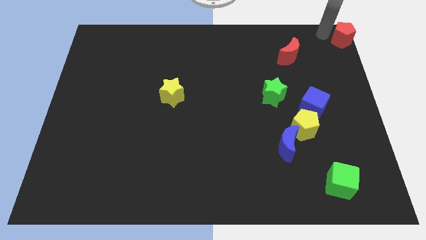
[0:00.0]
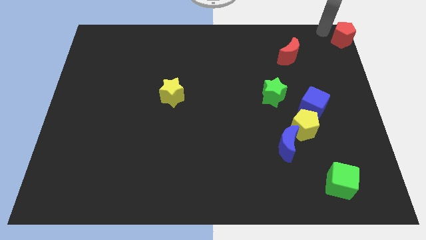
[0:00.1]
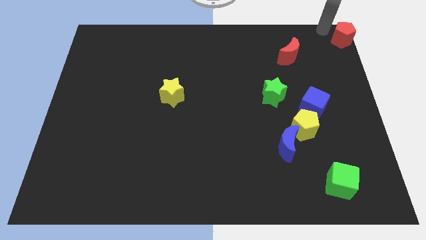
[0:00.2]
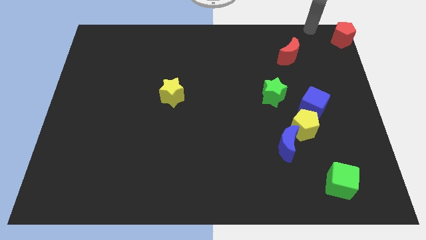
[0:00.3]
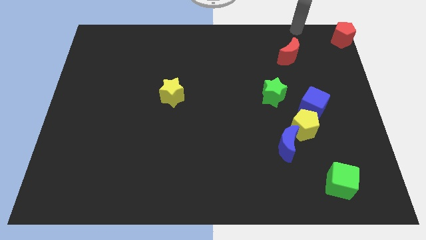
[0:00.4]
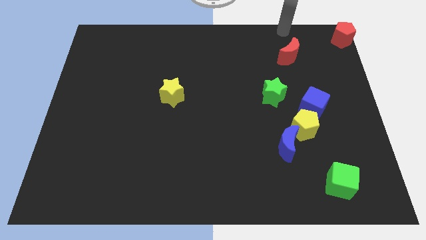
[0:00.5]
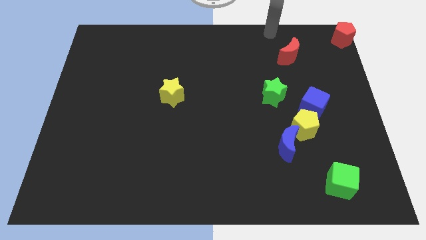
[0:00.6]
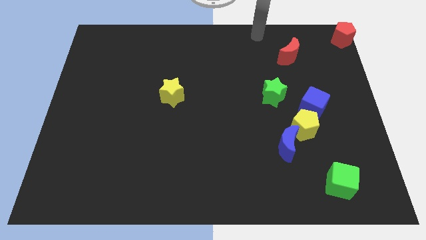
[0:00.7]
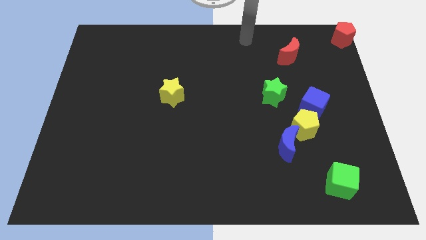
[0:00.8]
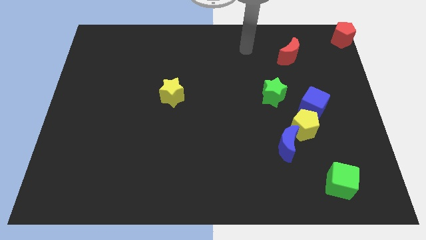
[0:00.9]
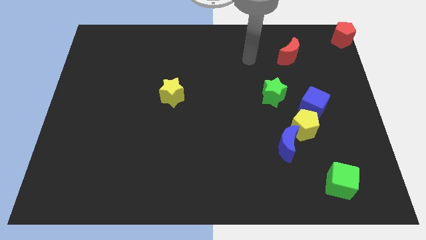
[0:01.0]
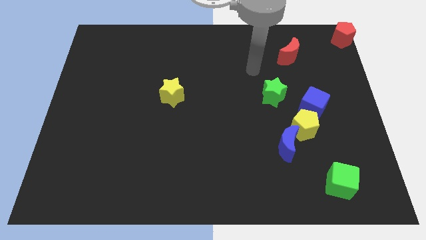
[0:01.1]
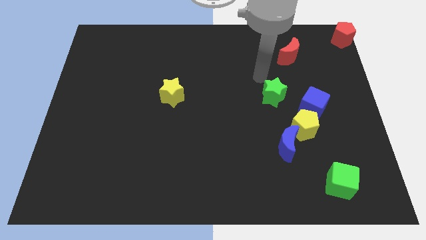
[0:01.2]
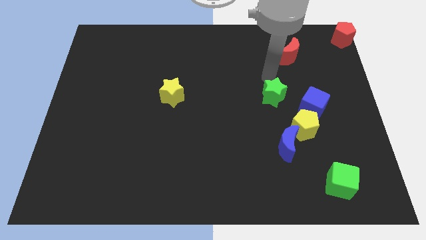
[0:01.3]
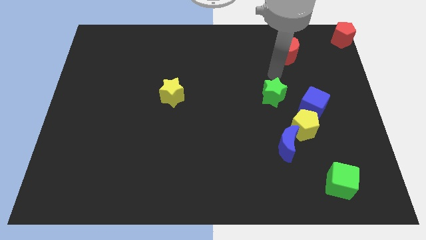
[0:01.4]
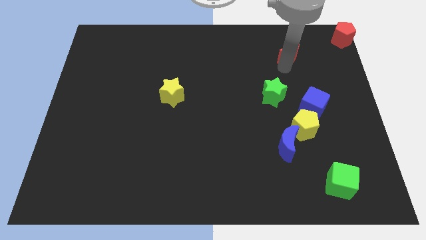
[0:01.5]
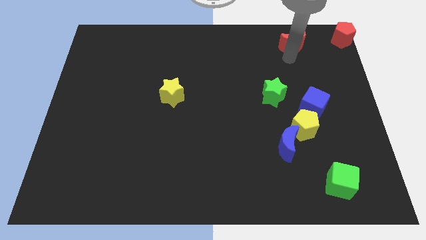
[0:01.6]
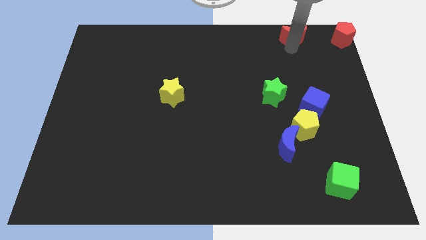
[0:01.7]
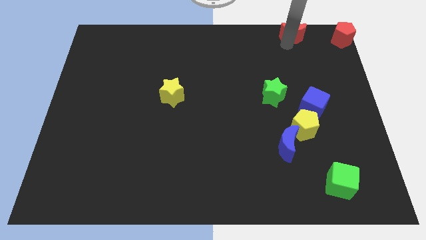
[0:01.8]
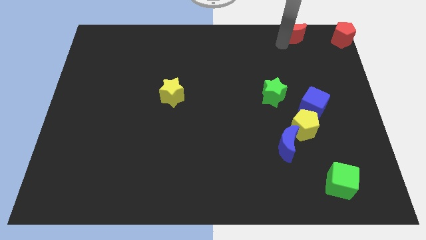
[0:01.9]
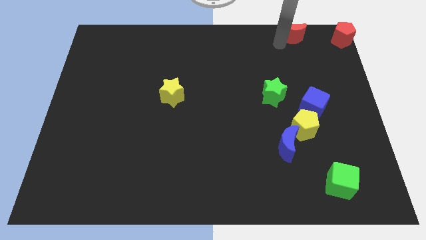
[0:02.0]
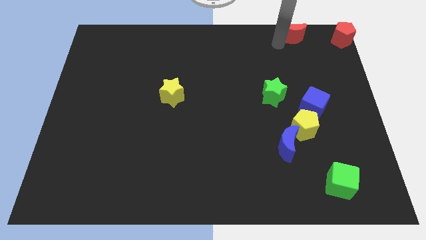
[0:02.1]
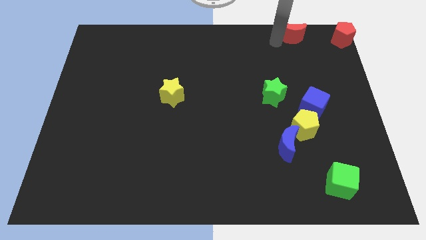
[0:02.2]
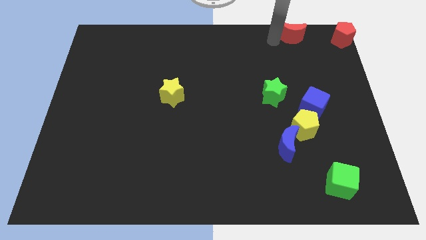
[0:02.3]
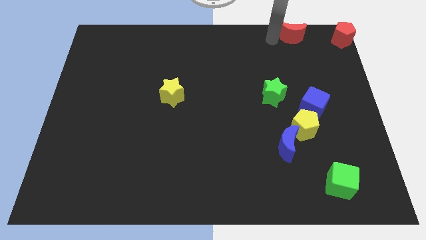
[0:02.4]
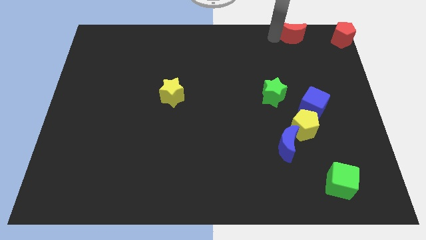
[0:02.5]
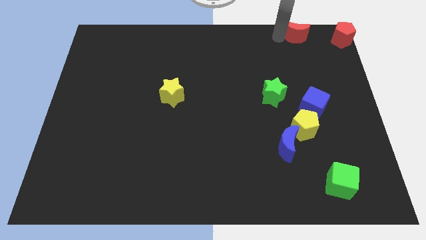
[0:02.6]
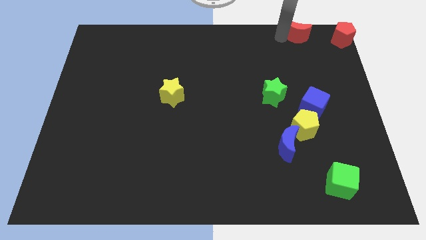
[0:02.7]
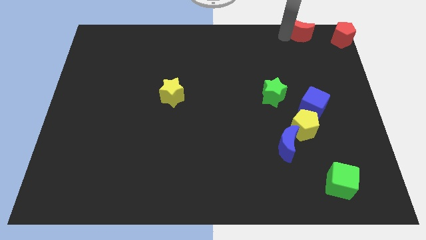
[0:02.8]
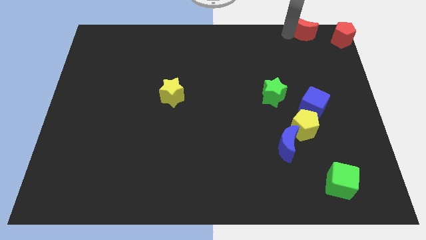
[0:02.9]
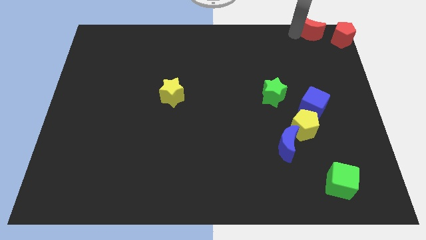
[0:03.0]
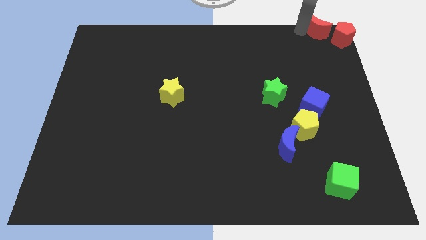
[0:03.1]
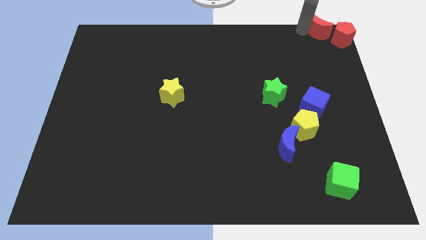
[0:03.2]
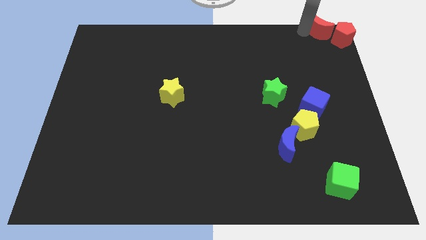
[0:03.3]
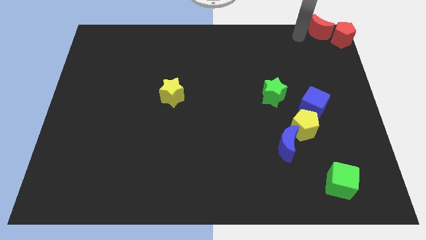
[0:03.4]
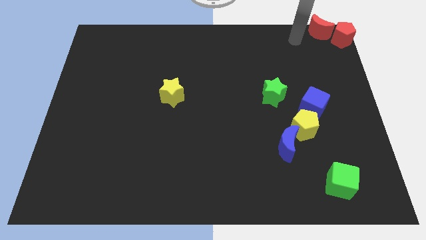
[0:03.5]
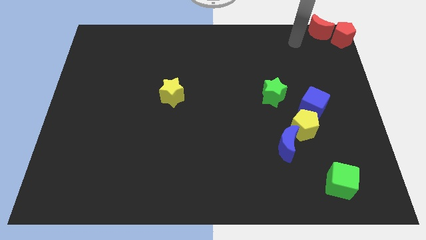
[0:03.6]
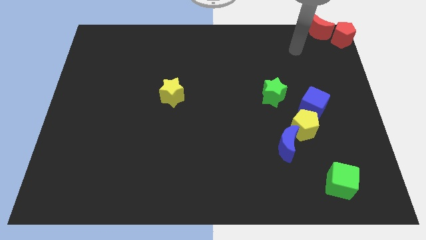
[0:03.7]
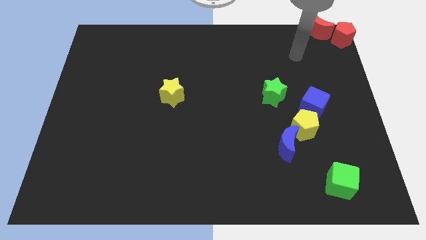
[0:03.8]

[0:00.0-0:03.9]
push the red crescent to the top right of the board

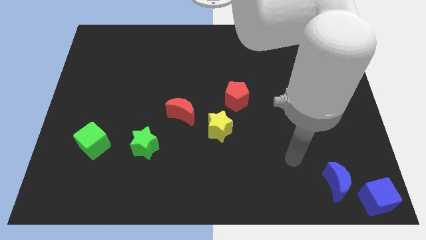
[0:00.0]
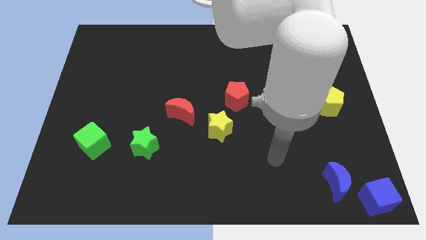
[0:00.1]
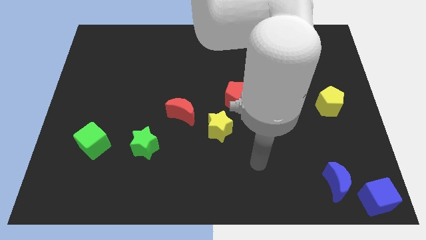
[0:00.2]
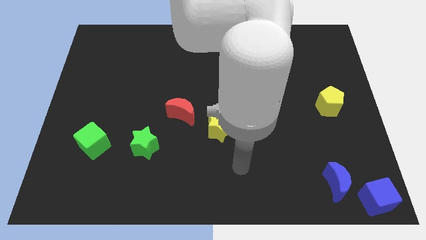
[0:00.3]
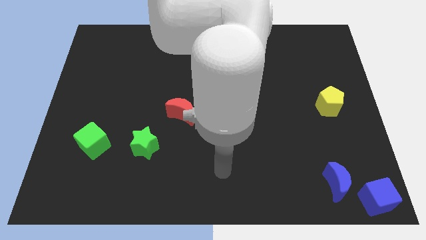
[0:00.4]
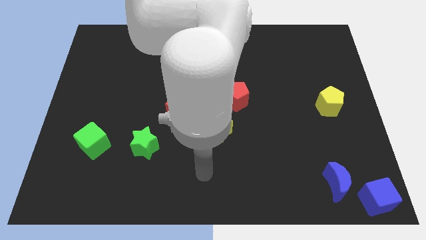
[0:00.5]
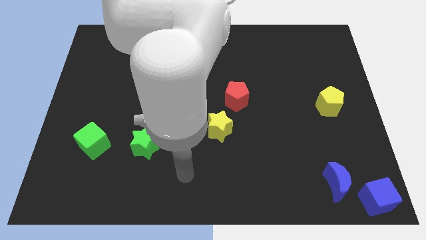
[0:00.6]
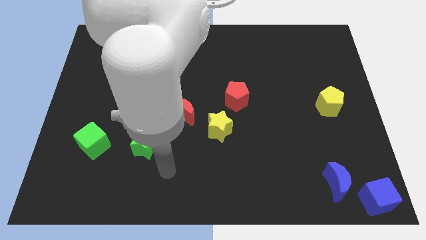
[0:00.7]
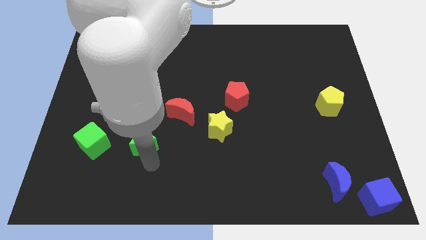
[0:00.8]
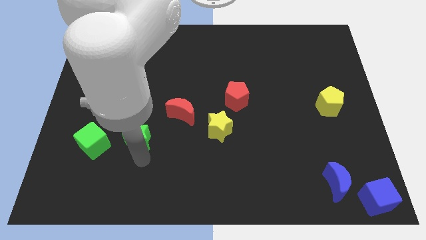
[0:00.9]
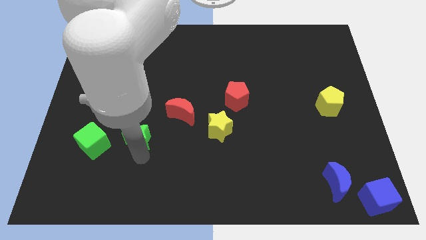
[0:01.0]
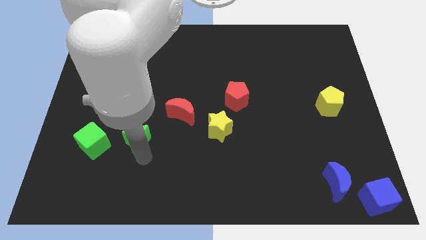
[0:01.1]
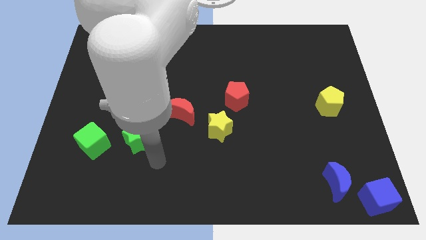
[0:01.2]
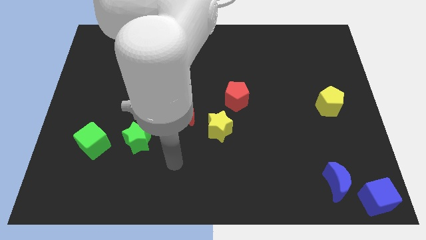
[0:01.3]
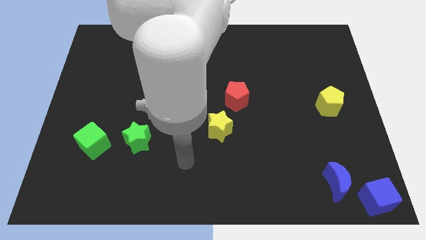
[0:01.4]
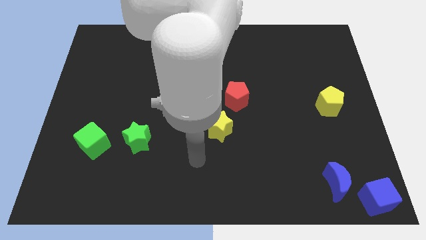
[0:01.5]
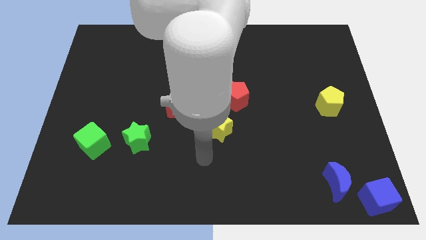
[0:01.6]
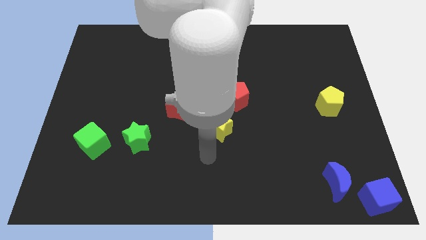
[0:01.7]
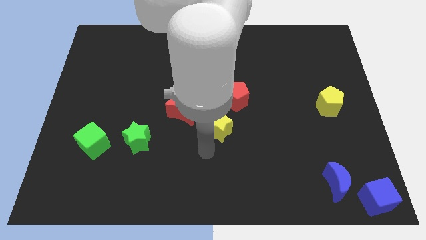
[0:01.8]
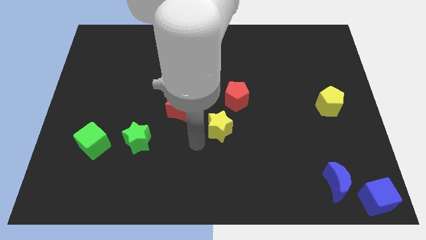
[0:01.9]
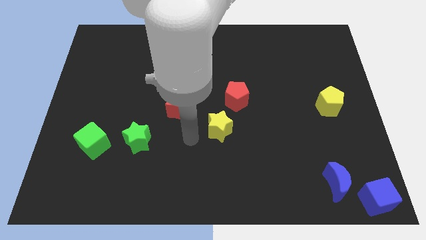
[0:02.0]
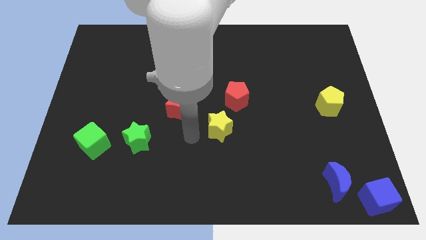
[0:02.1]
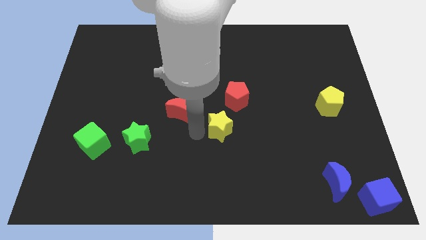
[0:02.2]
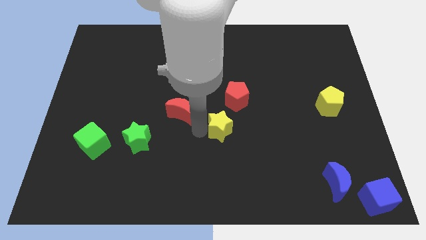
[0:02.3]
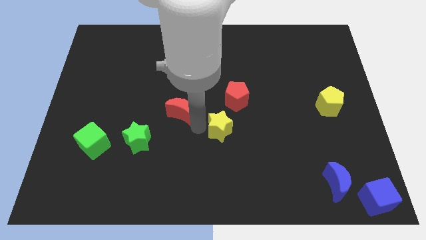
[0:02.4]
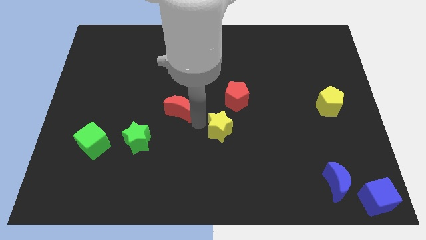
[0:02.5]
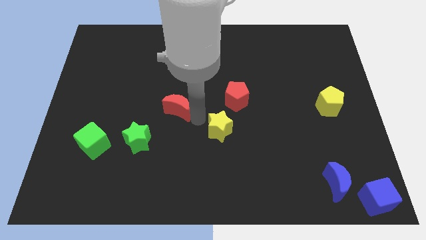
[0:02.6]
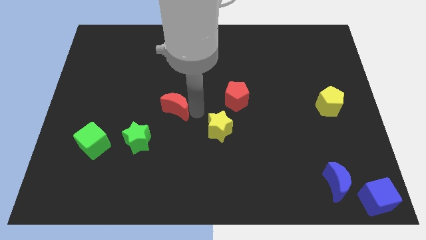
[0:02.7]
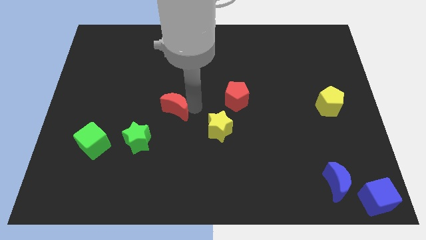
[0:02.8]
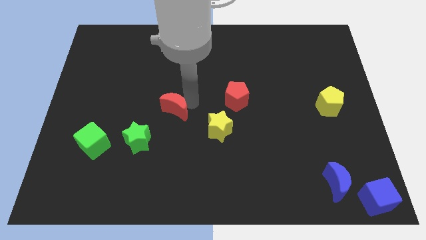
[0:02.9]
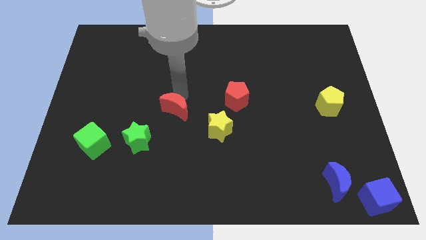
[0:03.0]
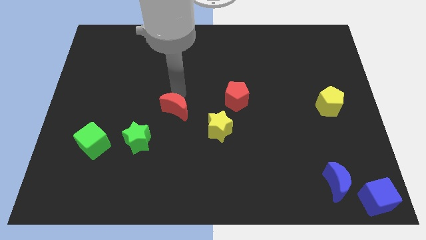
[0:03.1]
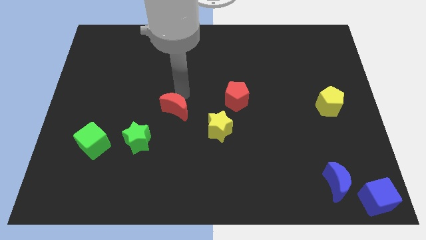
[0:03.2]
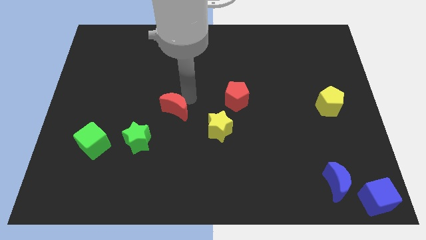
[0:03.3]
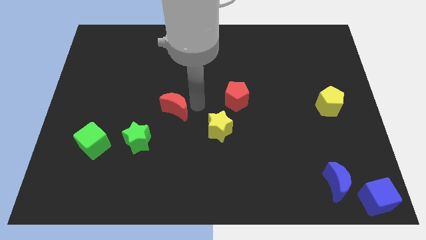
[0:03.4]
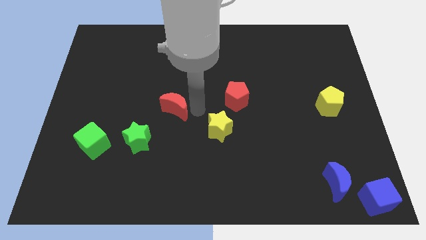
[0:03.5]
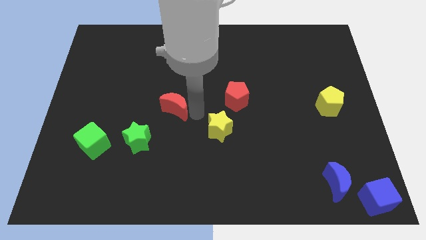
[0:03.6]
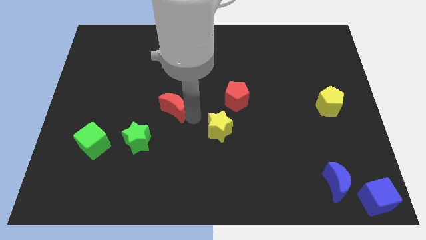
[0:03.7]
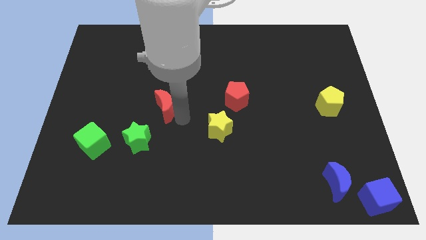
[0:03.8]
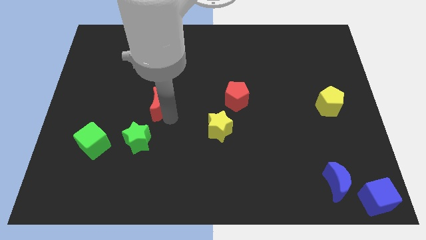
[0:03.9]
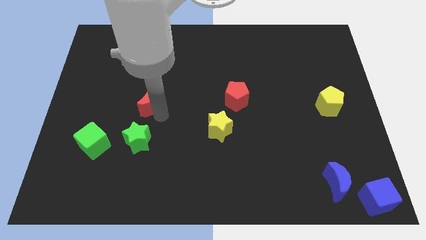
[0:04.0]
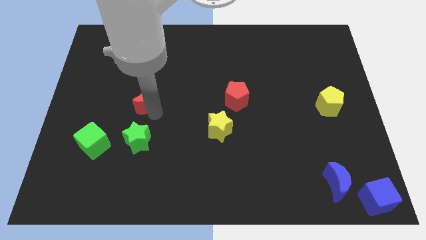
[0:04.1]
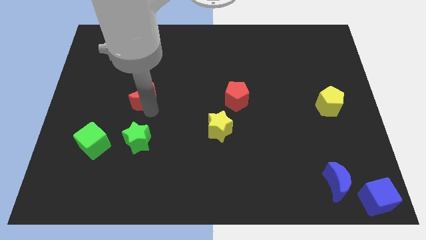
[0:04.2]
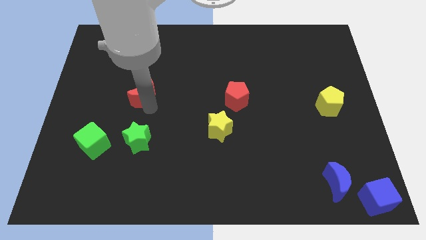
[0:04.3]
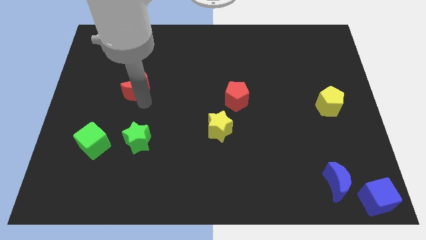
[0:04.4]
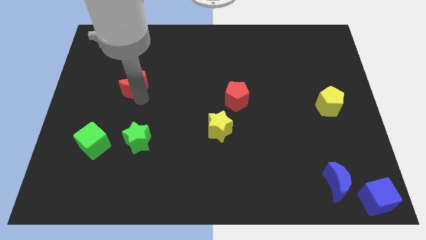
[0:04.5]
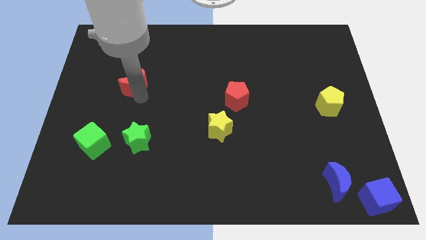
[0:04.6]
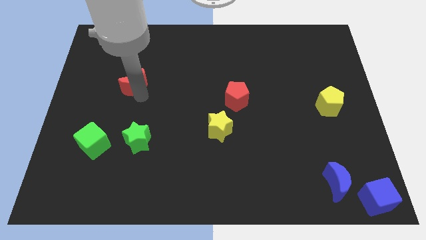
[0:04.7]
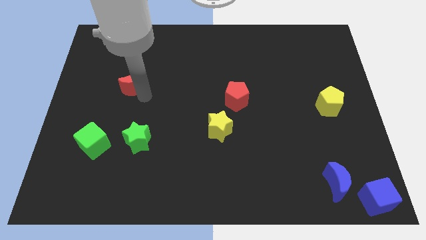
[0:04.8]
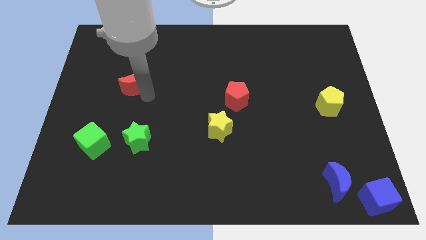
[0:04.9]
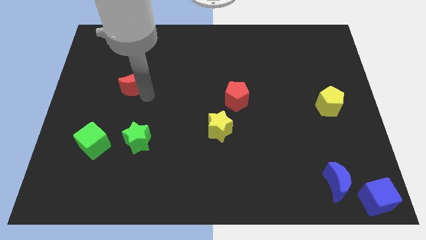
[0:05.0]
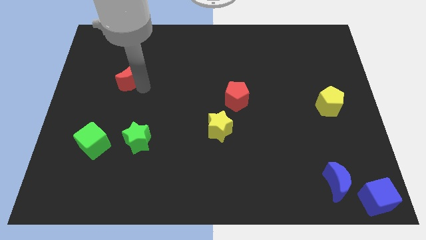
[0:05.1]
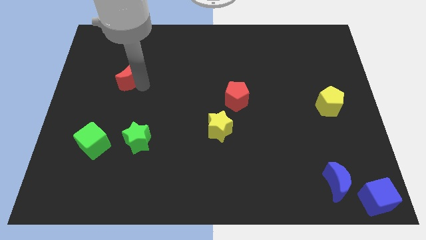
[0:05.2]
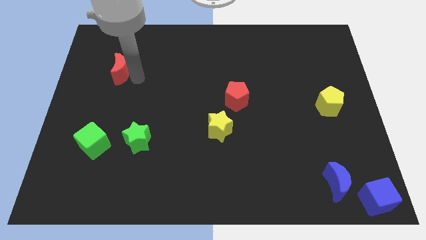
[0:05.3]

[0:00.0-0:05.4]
place the red crescent vertically above the green star
